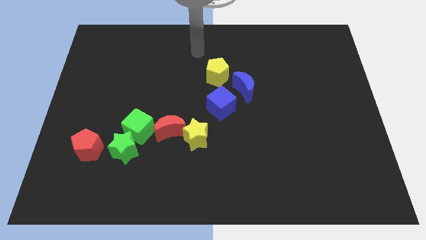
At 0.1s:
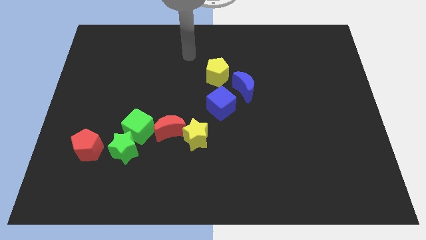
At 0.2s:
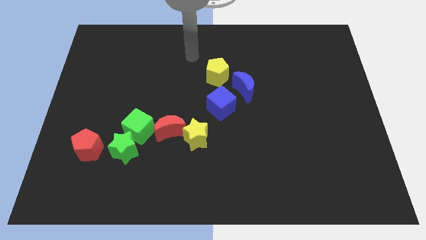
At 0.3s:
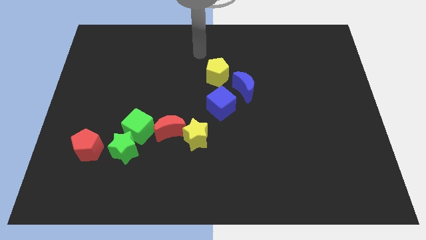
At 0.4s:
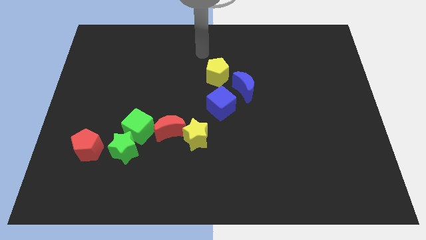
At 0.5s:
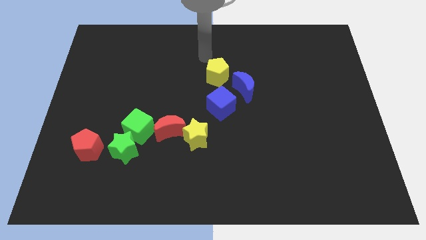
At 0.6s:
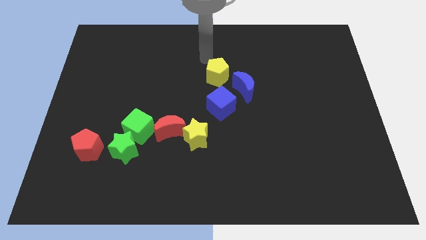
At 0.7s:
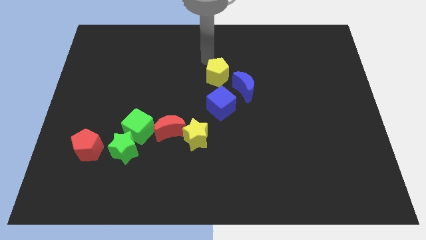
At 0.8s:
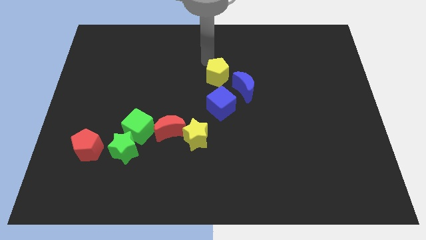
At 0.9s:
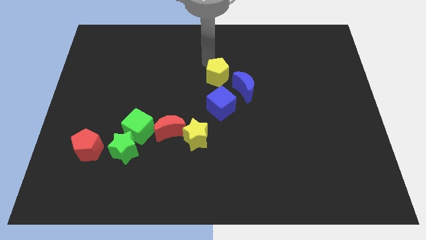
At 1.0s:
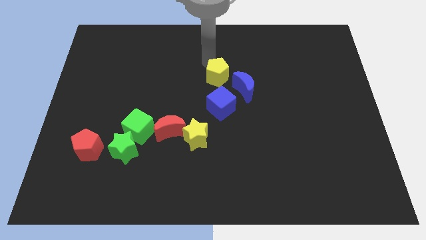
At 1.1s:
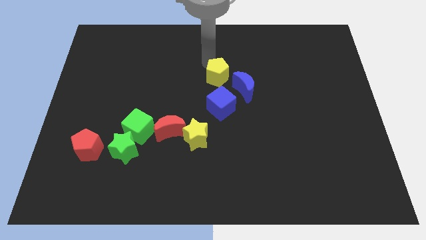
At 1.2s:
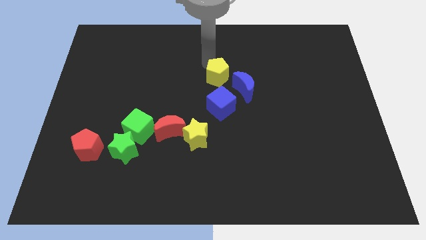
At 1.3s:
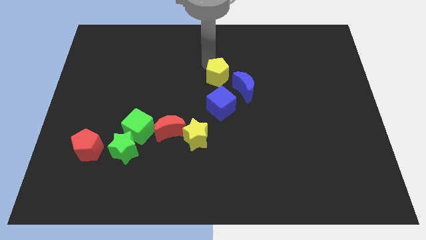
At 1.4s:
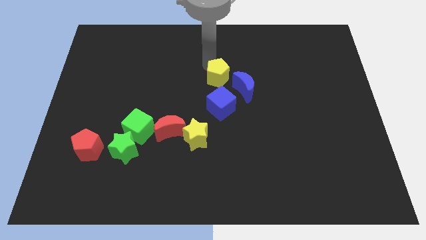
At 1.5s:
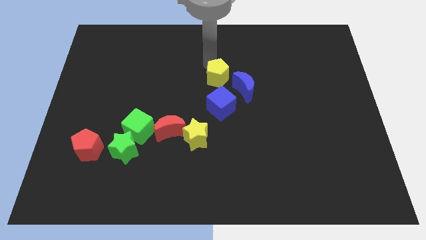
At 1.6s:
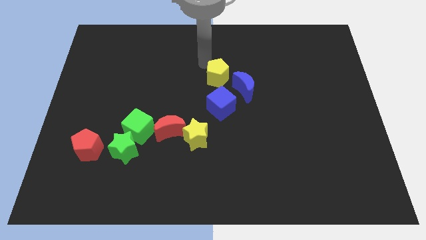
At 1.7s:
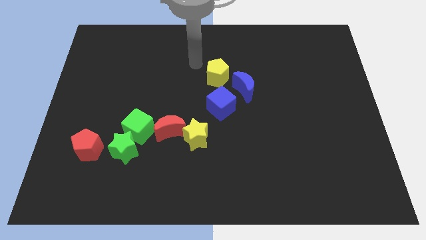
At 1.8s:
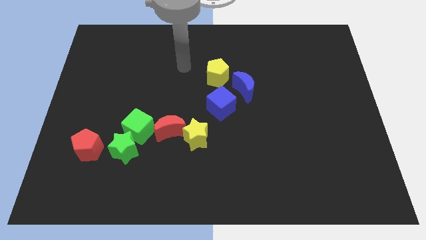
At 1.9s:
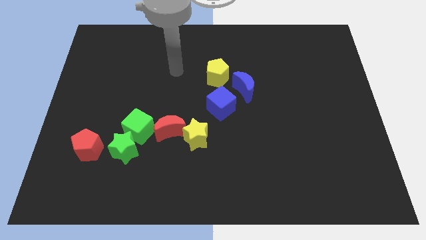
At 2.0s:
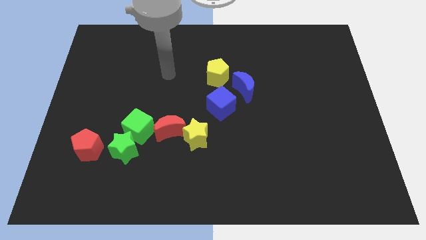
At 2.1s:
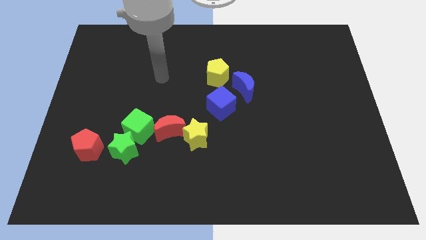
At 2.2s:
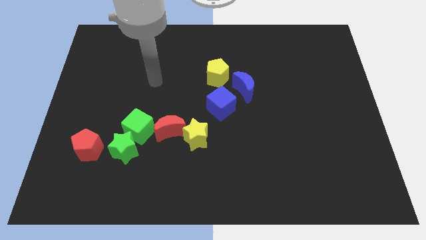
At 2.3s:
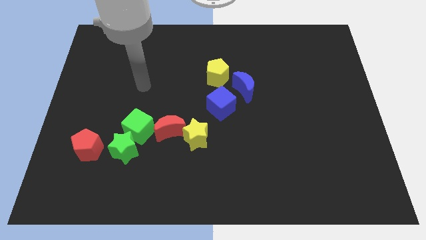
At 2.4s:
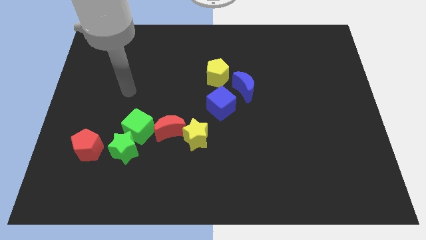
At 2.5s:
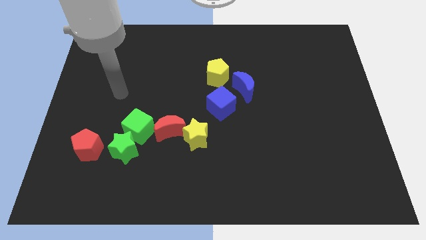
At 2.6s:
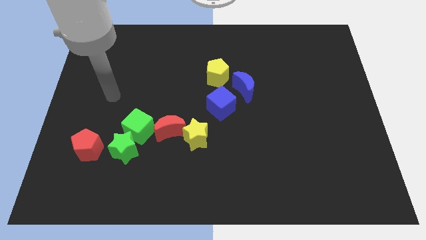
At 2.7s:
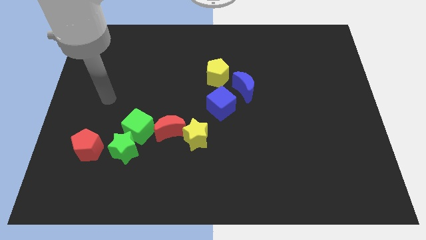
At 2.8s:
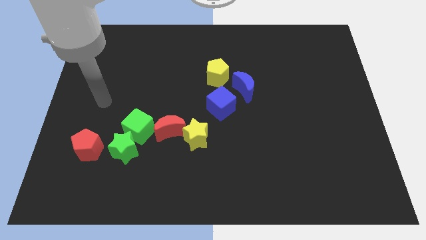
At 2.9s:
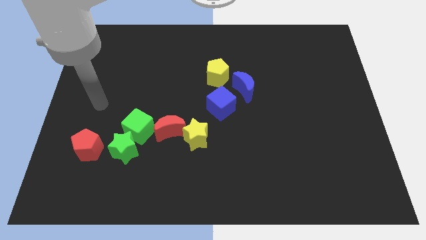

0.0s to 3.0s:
slightly push the yellow pentagon

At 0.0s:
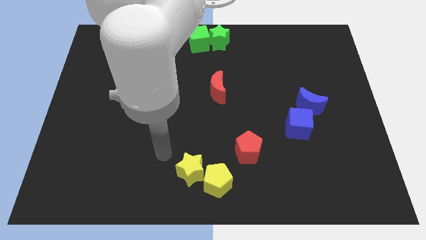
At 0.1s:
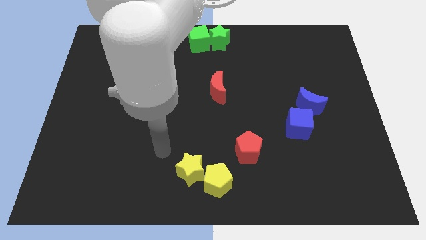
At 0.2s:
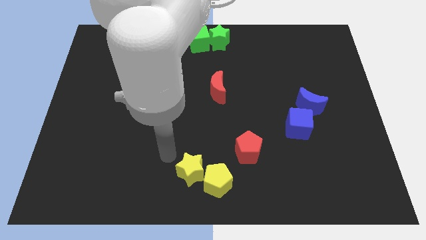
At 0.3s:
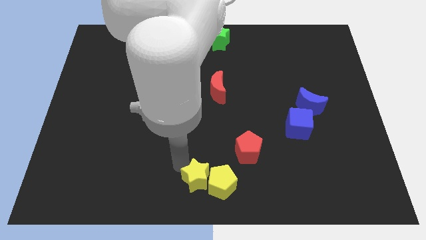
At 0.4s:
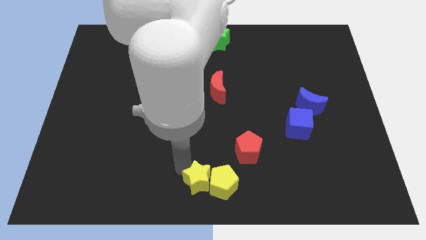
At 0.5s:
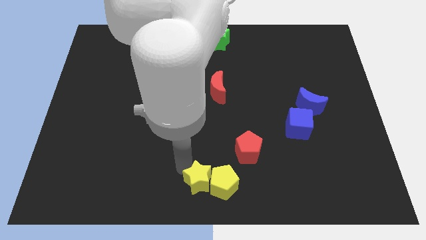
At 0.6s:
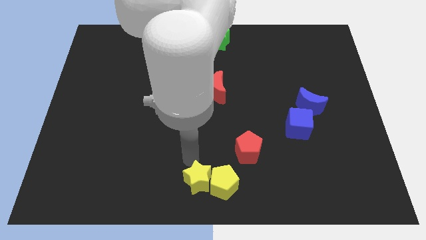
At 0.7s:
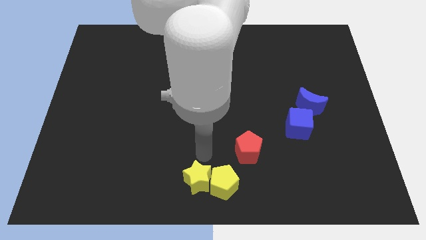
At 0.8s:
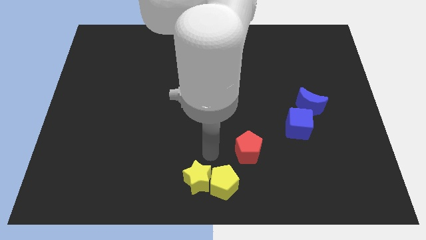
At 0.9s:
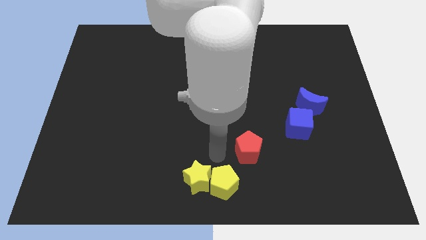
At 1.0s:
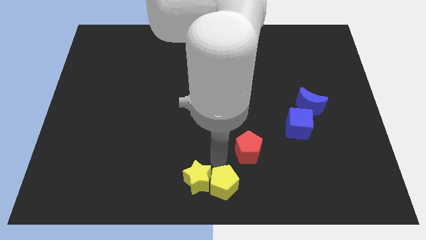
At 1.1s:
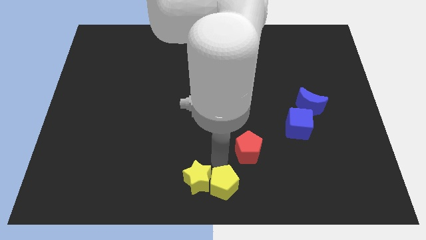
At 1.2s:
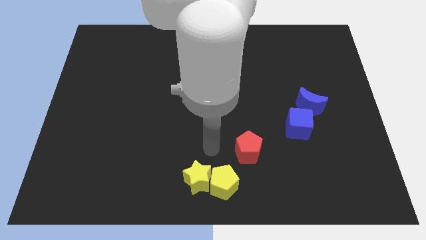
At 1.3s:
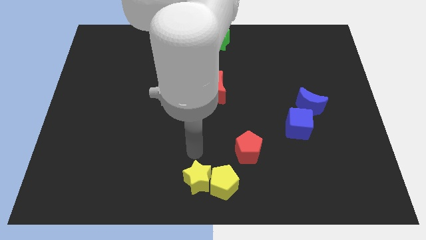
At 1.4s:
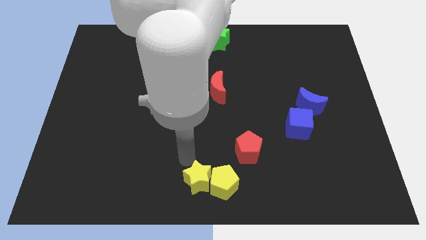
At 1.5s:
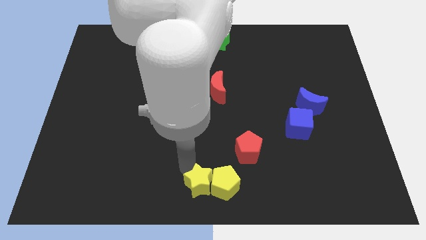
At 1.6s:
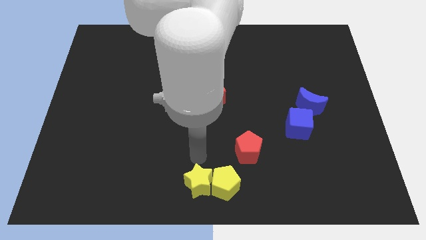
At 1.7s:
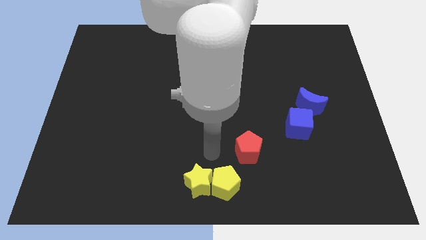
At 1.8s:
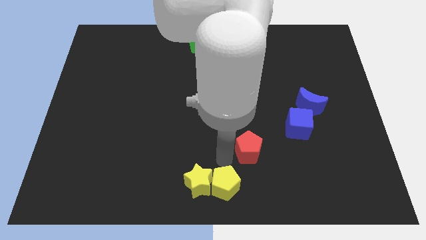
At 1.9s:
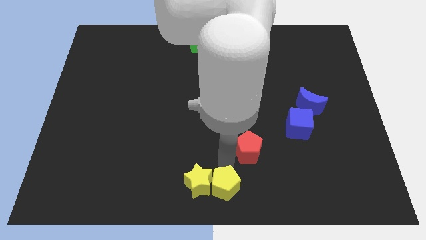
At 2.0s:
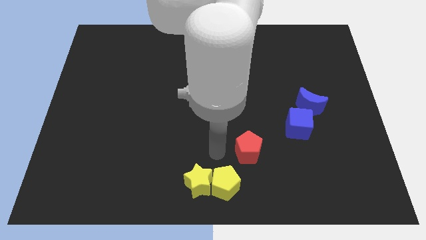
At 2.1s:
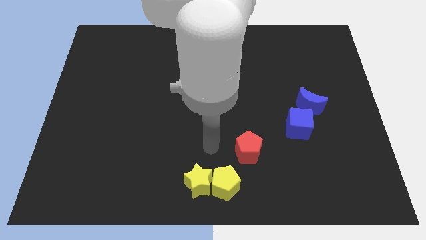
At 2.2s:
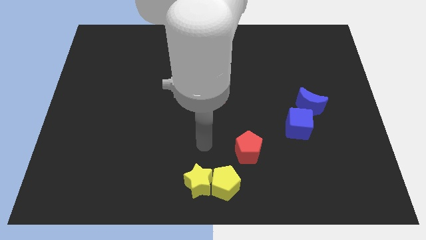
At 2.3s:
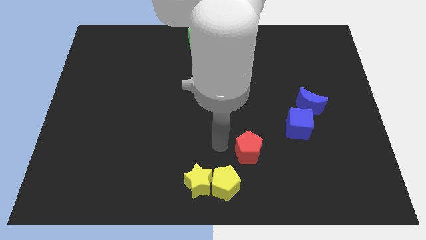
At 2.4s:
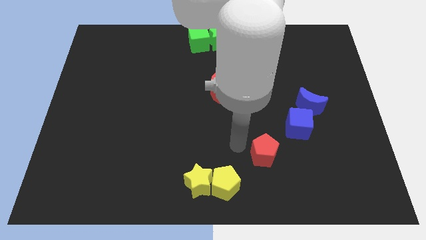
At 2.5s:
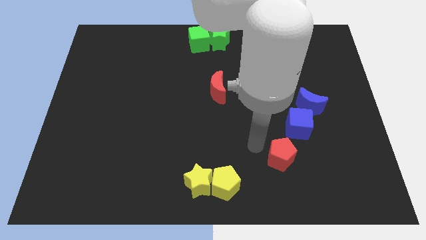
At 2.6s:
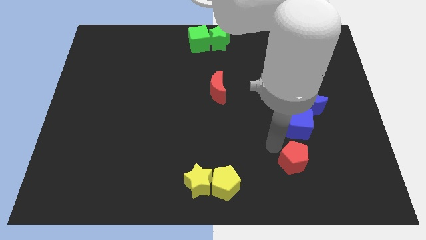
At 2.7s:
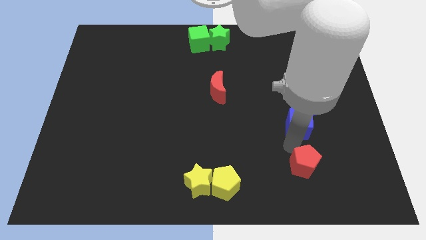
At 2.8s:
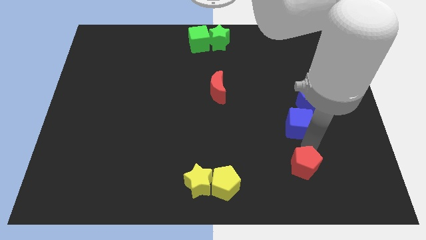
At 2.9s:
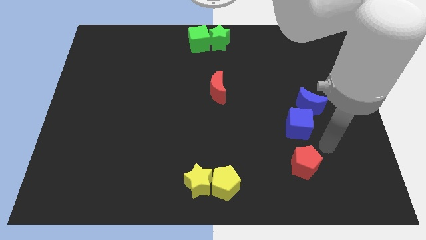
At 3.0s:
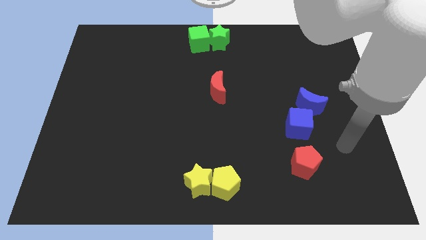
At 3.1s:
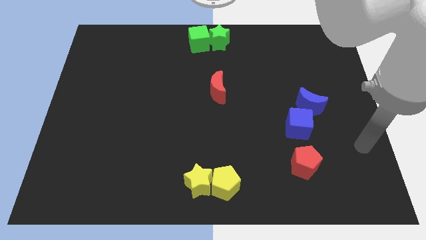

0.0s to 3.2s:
move the red pentagon parallel below to the blue cube

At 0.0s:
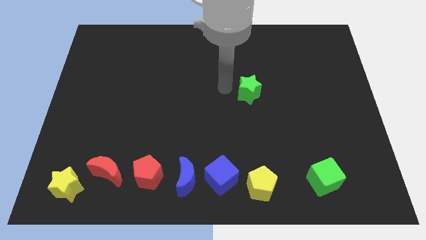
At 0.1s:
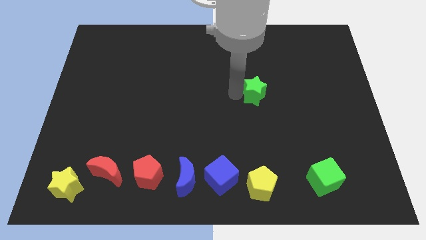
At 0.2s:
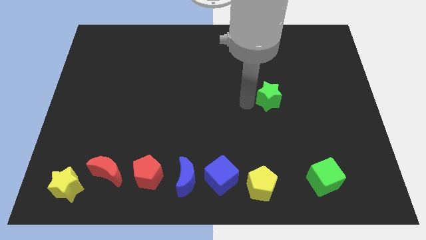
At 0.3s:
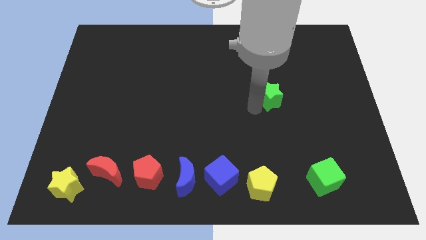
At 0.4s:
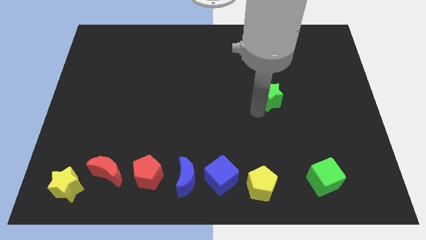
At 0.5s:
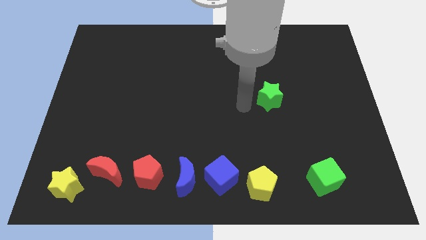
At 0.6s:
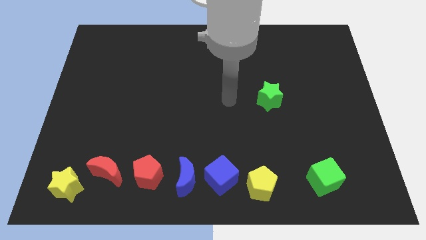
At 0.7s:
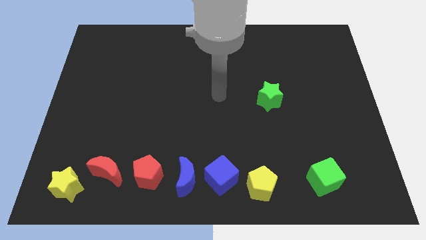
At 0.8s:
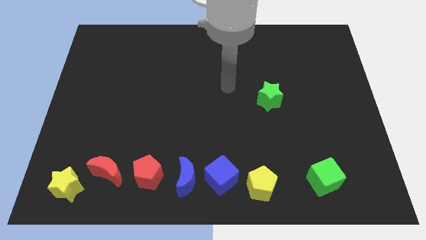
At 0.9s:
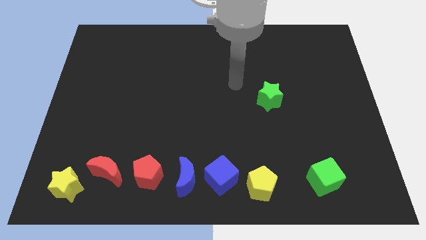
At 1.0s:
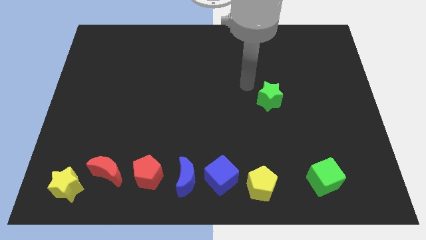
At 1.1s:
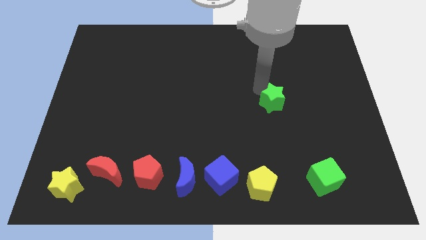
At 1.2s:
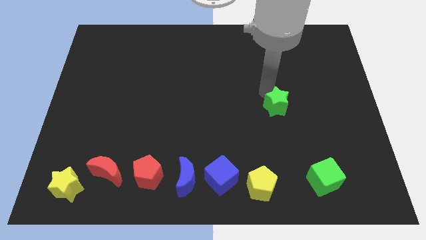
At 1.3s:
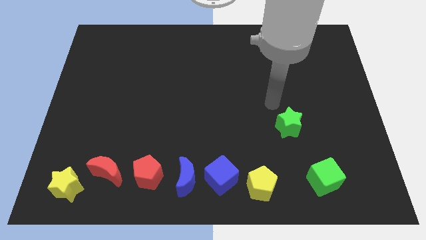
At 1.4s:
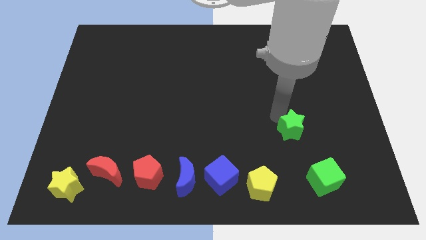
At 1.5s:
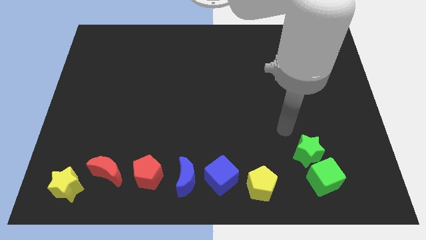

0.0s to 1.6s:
push the green star towards the green cube

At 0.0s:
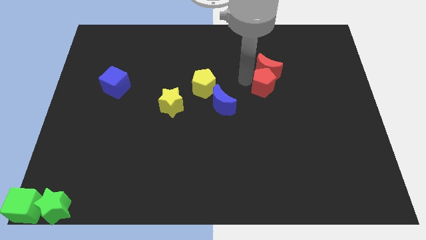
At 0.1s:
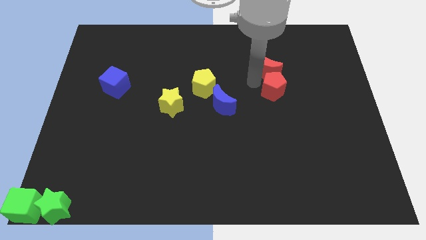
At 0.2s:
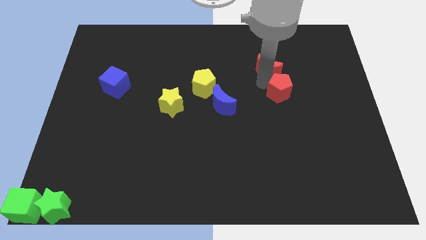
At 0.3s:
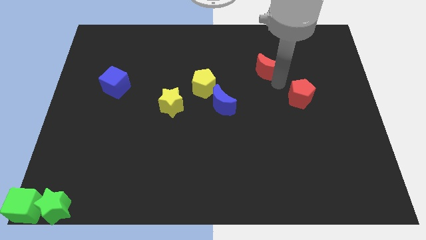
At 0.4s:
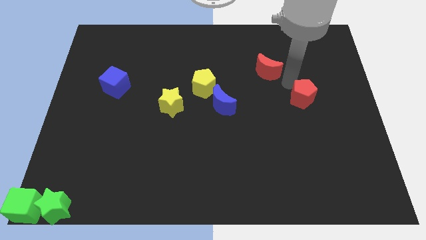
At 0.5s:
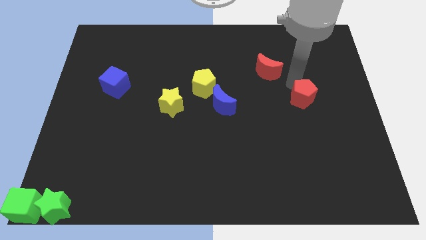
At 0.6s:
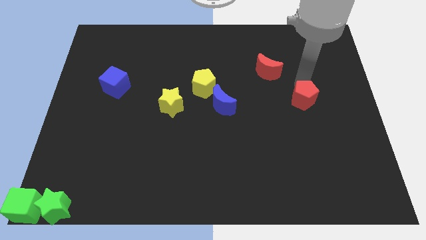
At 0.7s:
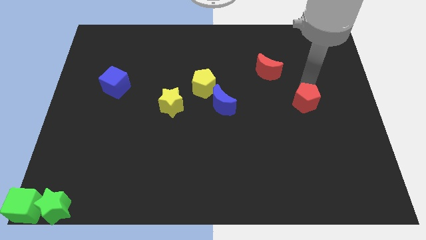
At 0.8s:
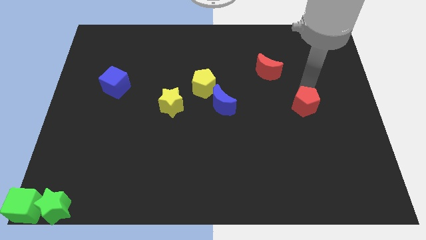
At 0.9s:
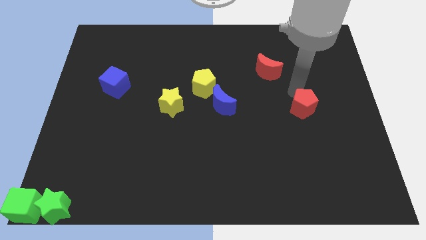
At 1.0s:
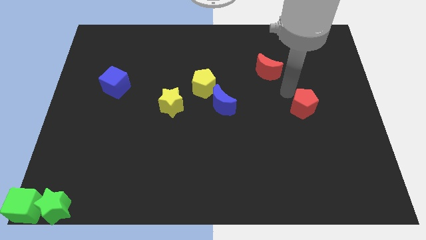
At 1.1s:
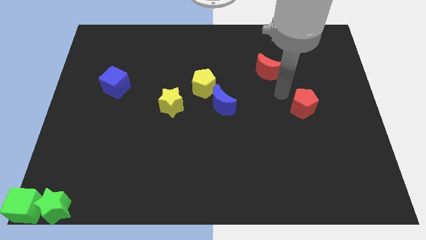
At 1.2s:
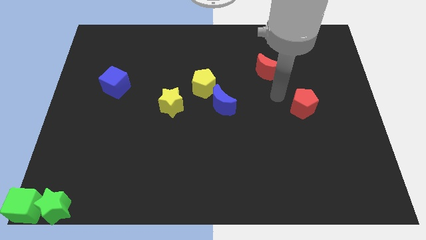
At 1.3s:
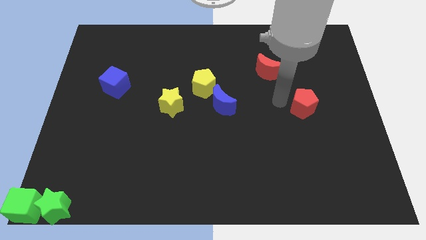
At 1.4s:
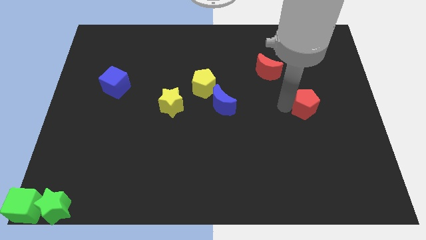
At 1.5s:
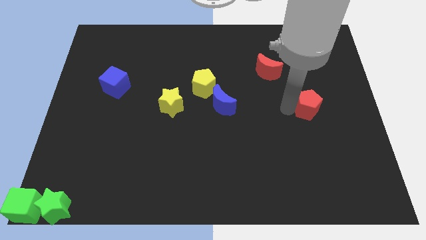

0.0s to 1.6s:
move the red pentagon away from the red crescent
